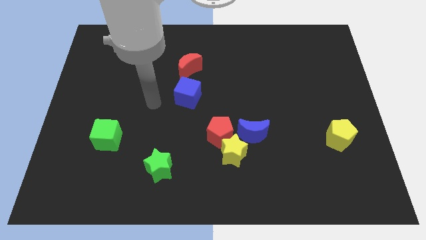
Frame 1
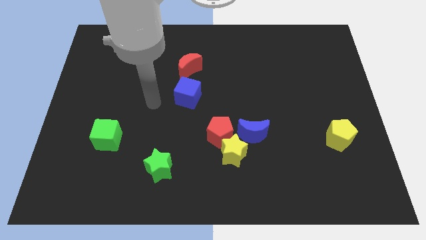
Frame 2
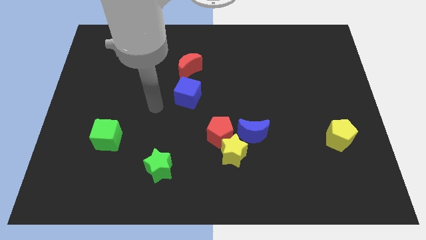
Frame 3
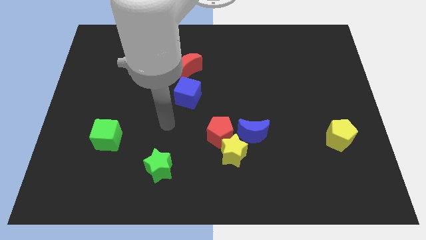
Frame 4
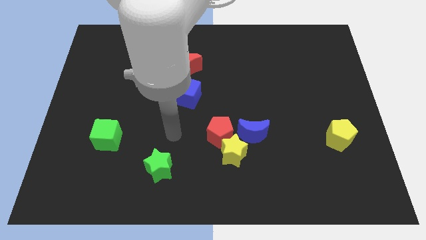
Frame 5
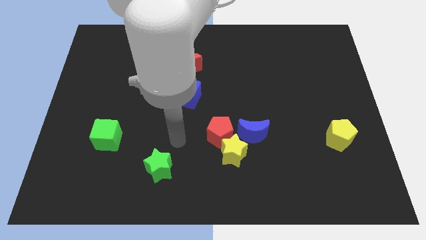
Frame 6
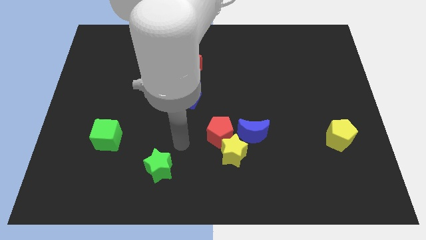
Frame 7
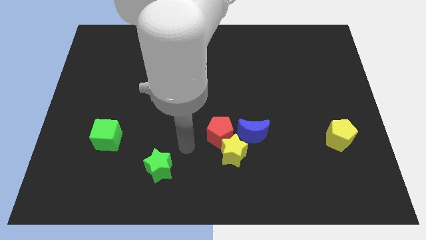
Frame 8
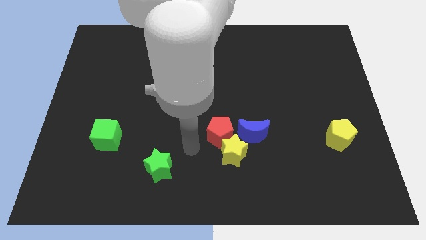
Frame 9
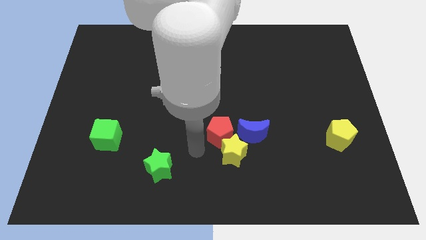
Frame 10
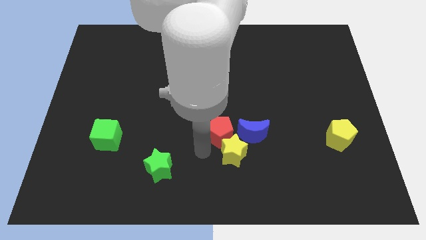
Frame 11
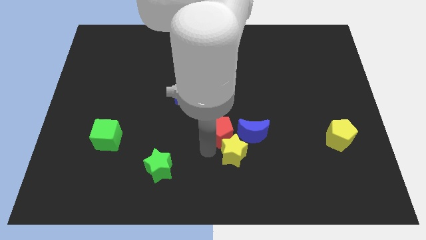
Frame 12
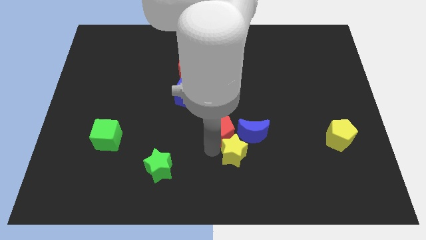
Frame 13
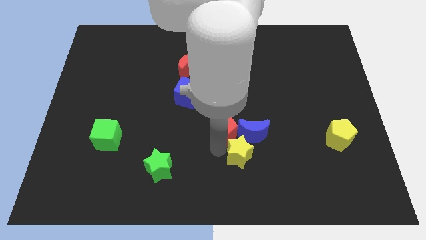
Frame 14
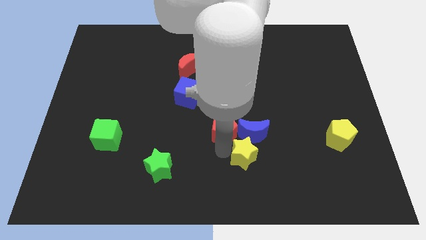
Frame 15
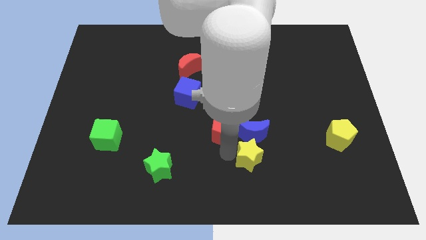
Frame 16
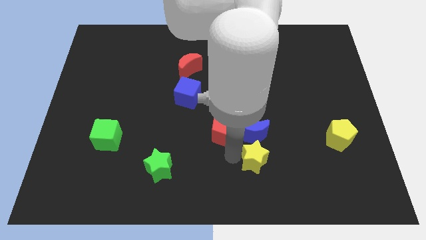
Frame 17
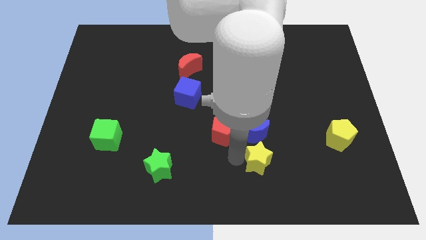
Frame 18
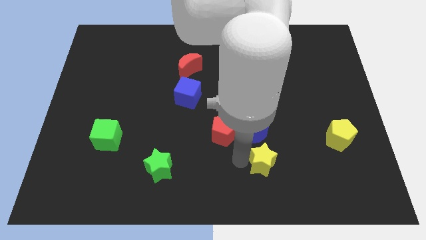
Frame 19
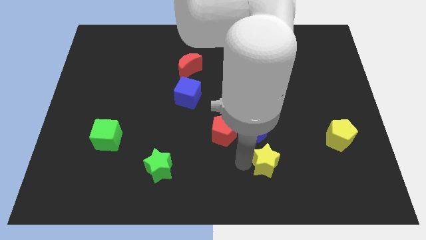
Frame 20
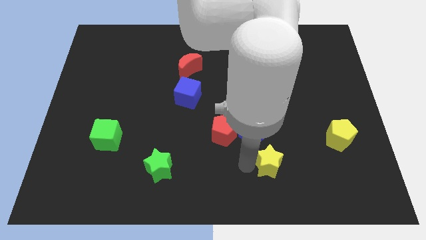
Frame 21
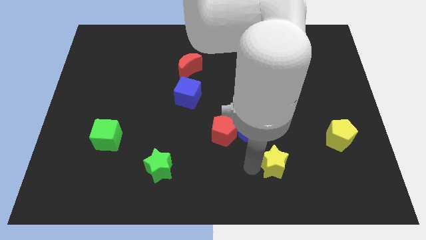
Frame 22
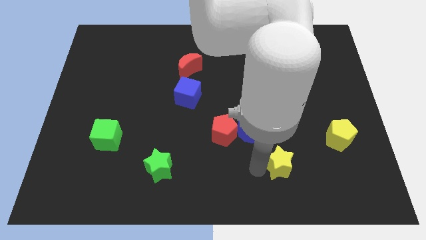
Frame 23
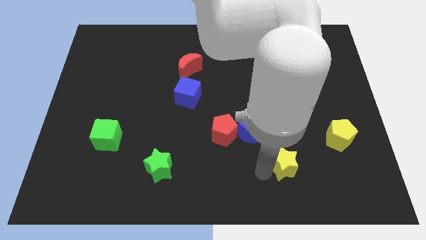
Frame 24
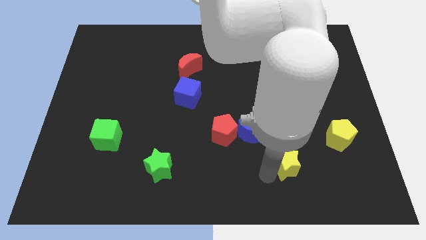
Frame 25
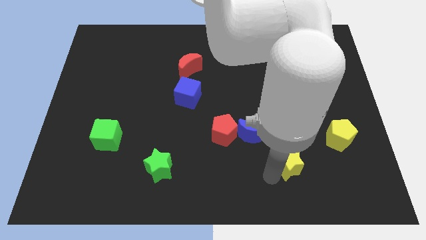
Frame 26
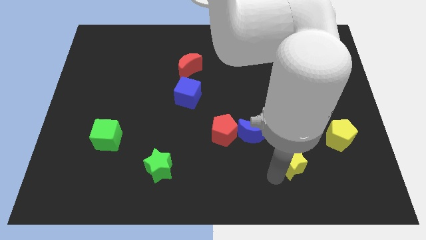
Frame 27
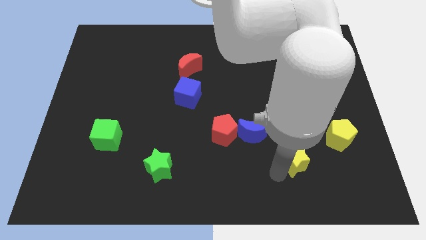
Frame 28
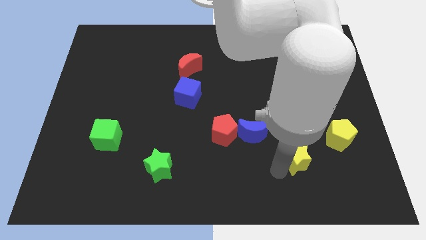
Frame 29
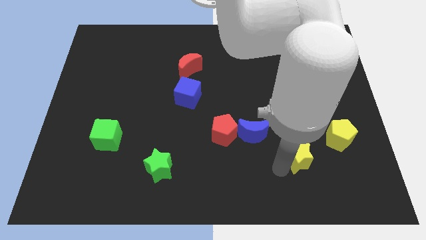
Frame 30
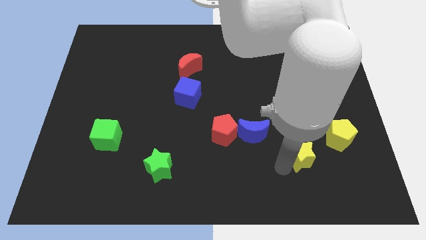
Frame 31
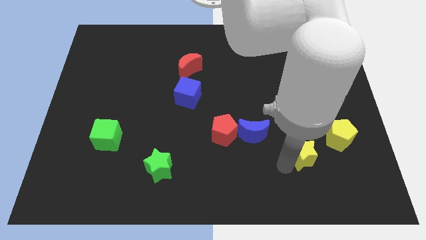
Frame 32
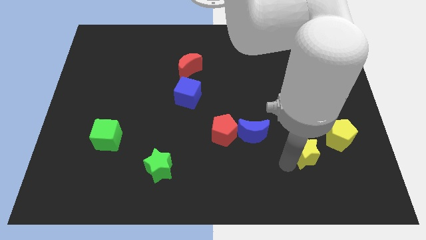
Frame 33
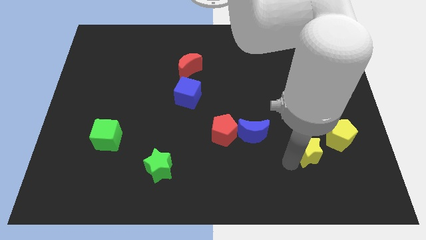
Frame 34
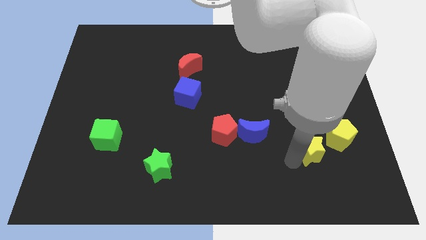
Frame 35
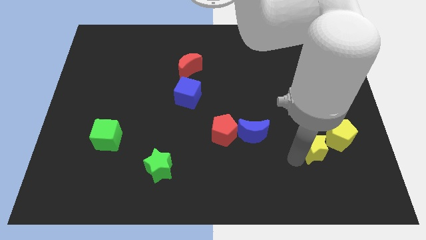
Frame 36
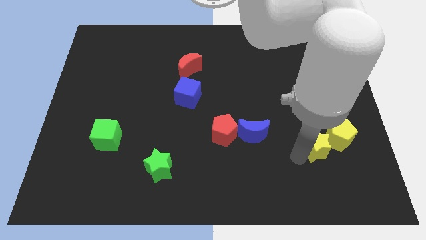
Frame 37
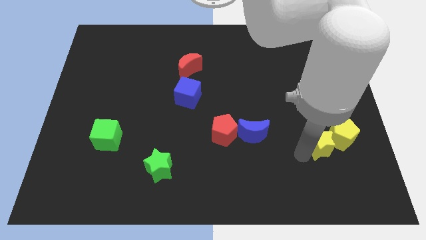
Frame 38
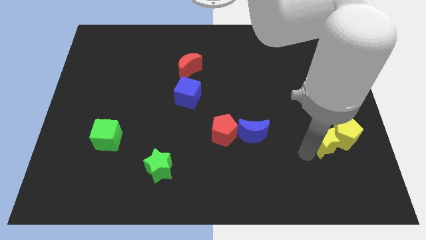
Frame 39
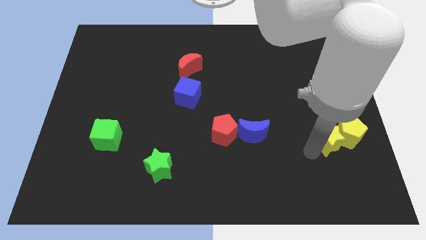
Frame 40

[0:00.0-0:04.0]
put the yellow star to the yellow pentagon

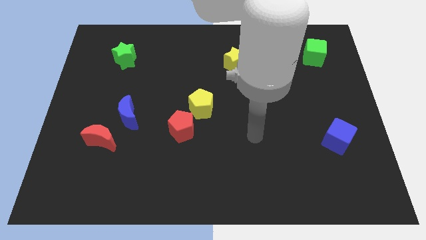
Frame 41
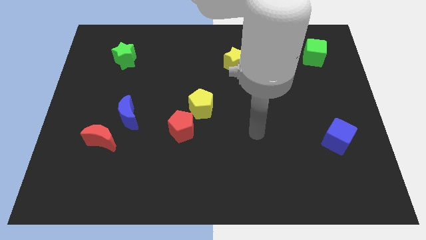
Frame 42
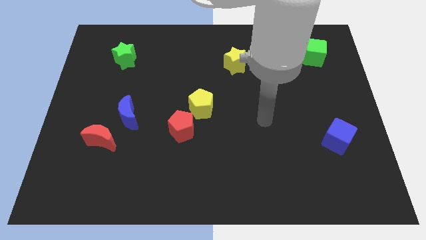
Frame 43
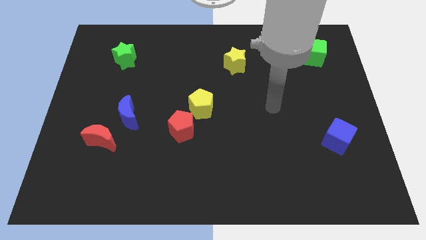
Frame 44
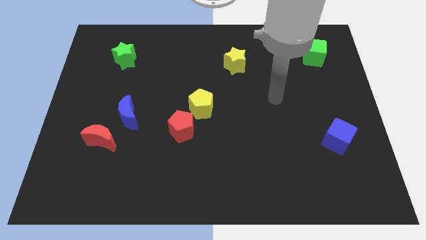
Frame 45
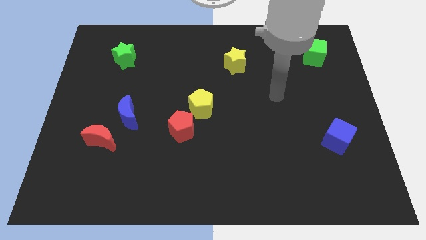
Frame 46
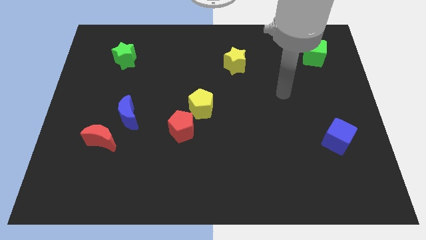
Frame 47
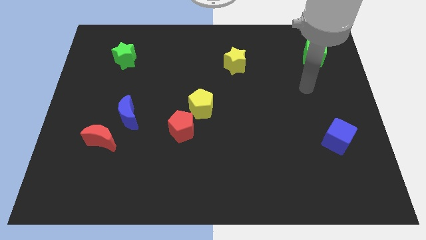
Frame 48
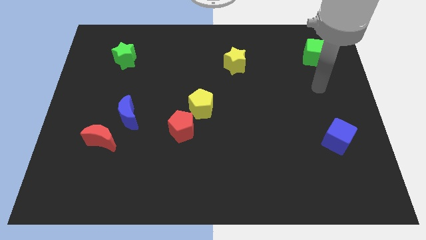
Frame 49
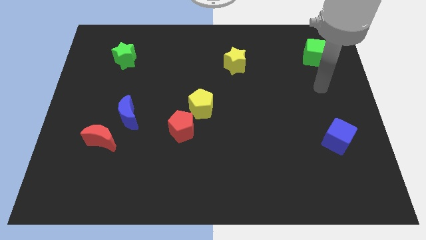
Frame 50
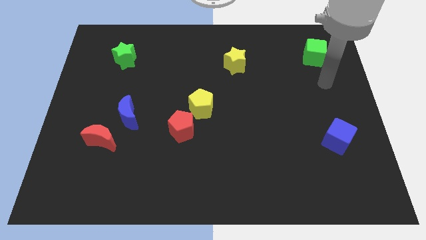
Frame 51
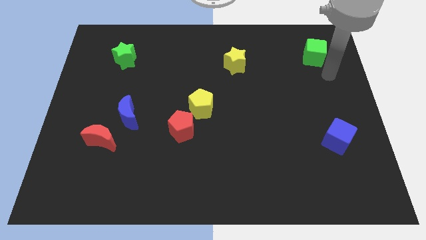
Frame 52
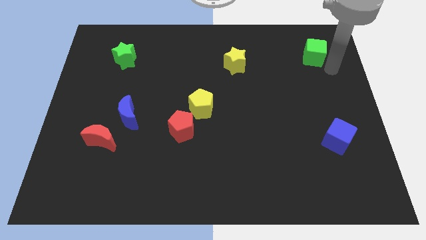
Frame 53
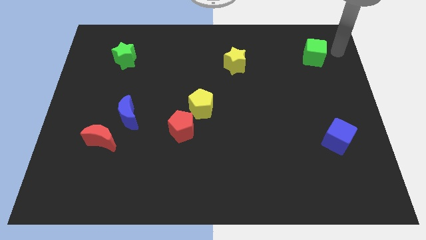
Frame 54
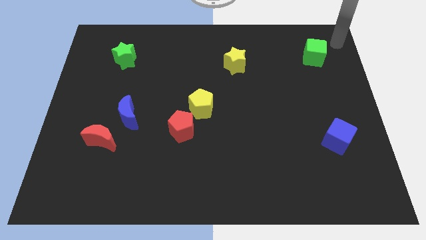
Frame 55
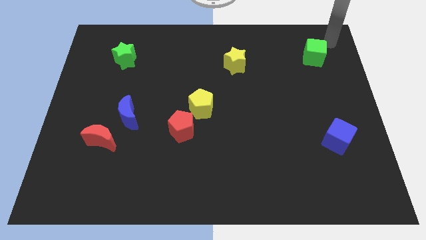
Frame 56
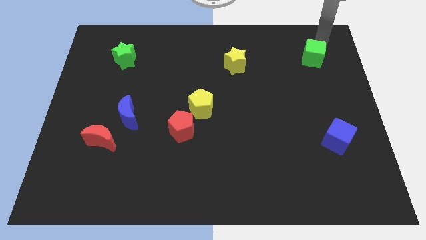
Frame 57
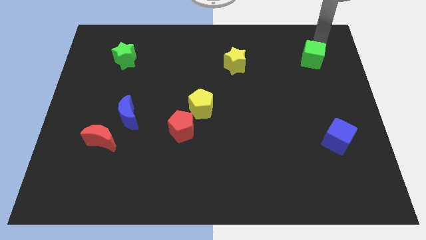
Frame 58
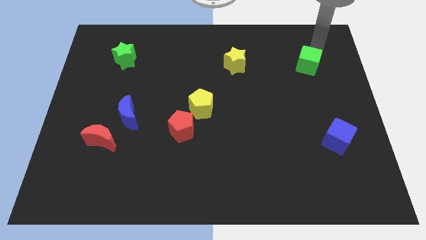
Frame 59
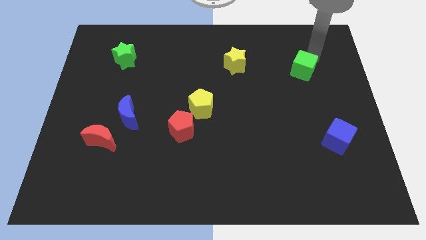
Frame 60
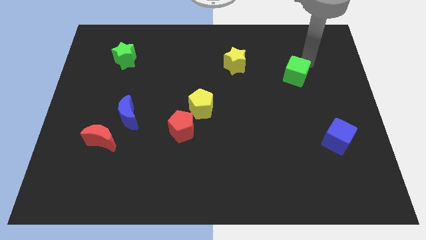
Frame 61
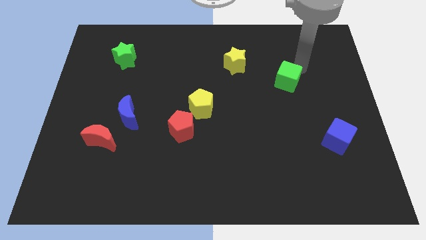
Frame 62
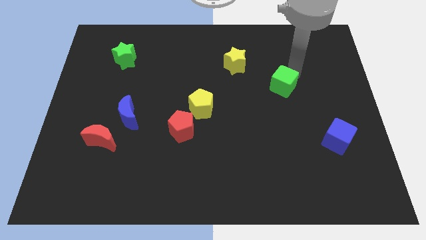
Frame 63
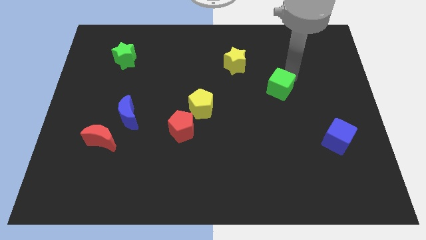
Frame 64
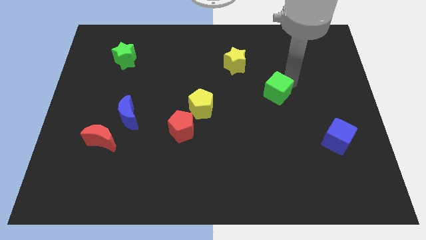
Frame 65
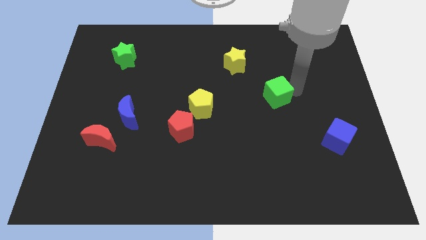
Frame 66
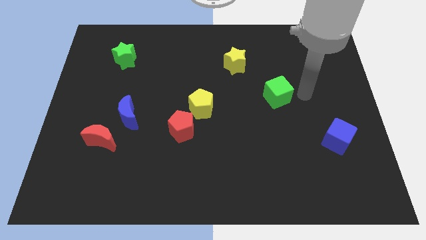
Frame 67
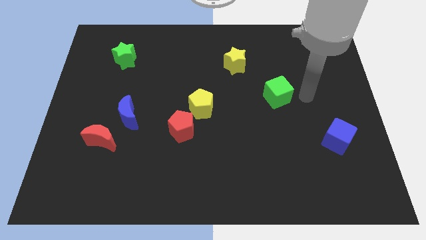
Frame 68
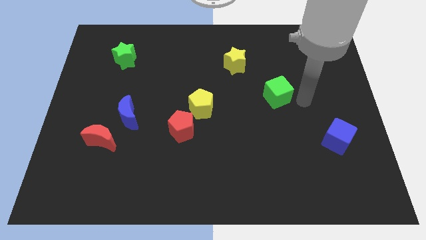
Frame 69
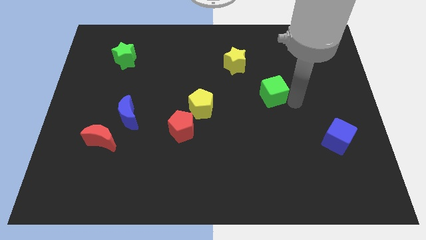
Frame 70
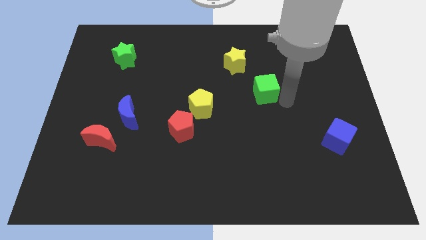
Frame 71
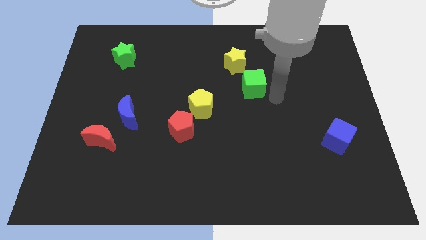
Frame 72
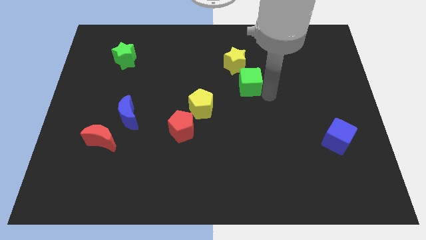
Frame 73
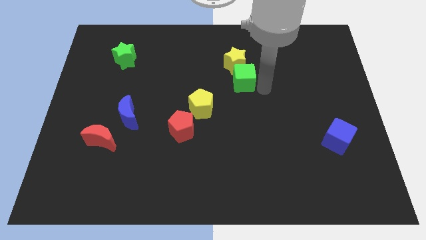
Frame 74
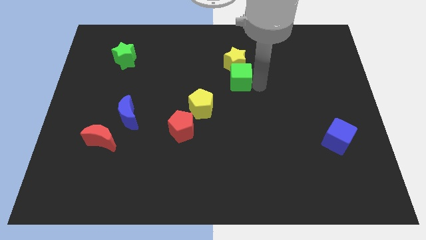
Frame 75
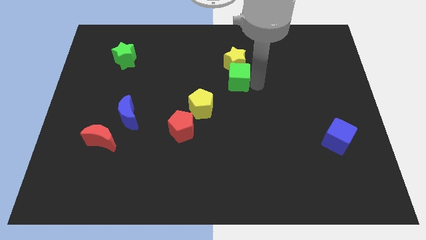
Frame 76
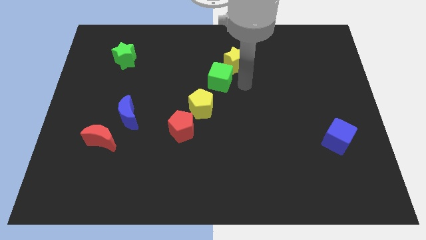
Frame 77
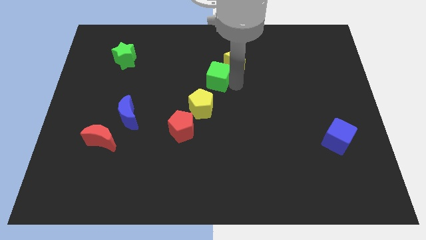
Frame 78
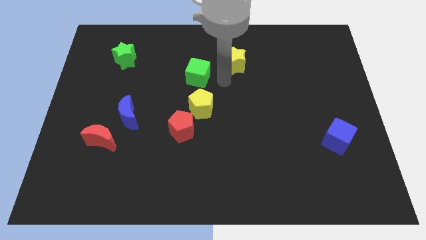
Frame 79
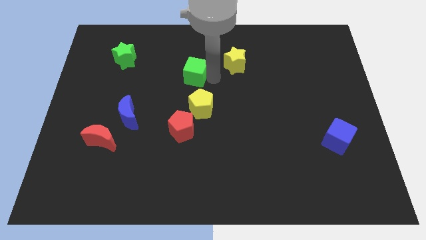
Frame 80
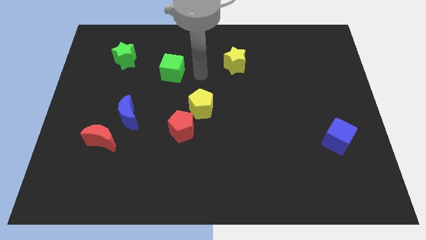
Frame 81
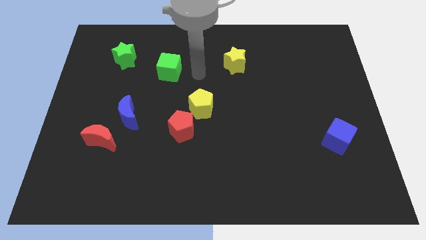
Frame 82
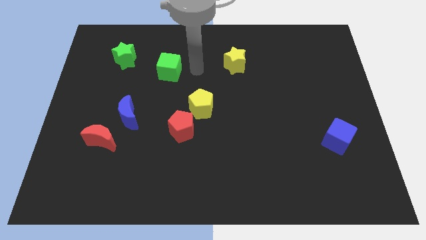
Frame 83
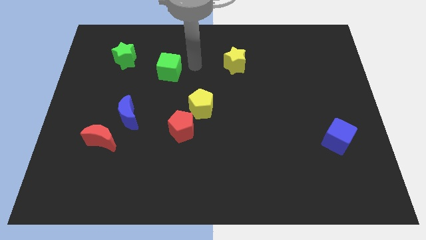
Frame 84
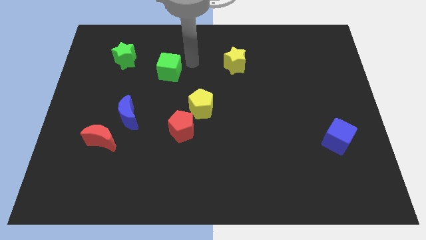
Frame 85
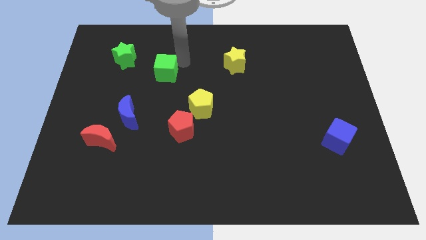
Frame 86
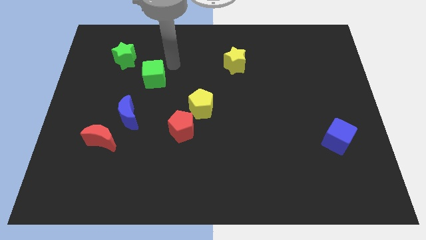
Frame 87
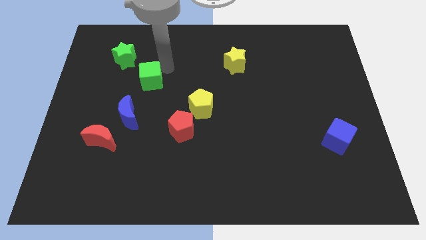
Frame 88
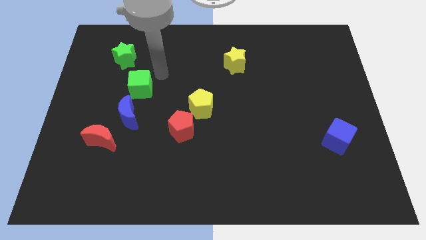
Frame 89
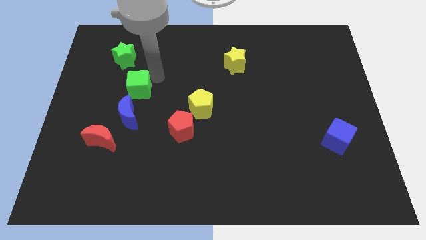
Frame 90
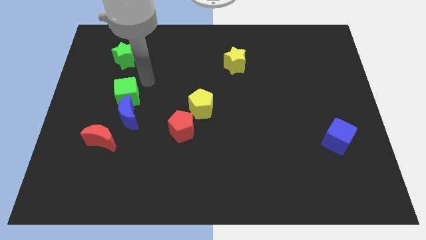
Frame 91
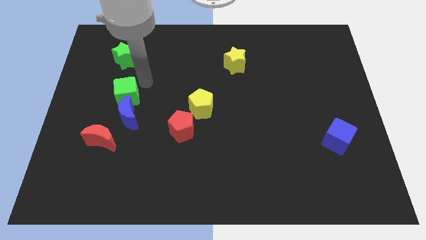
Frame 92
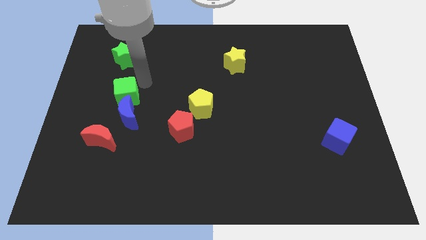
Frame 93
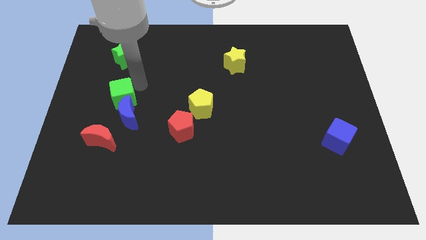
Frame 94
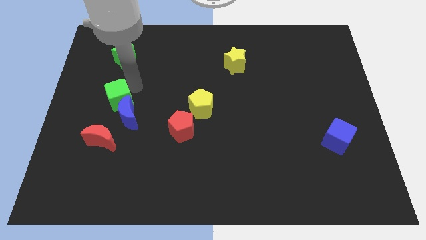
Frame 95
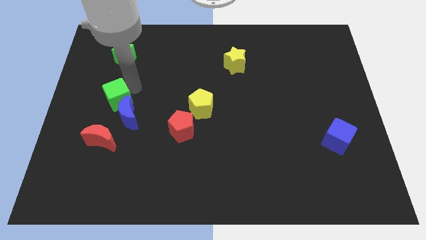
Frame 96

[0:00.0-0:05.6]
put the green cube to the blue moon
